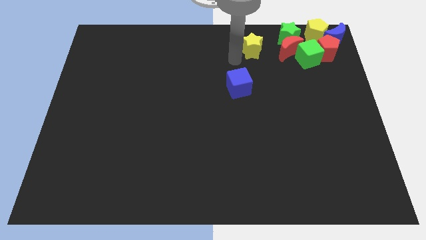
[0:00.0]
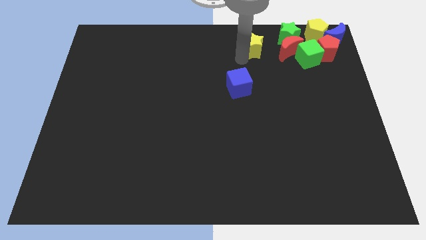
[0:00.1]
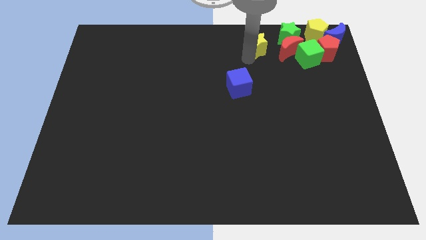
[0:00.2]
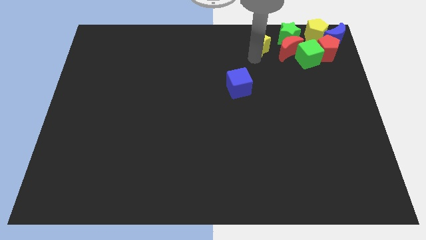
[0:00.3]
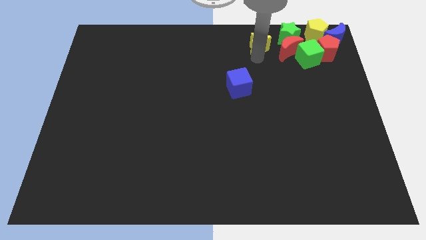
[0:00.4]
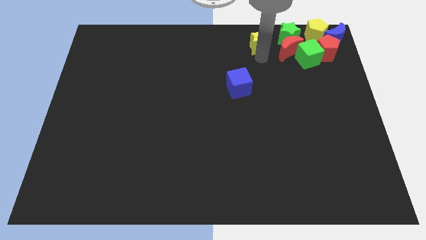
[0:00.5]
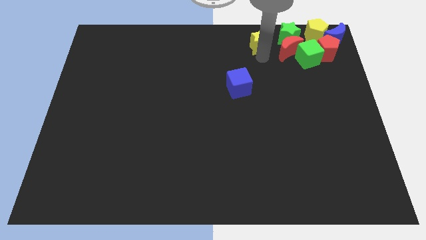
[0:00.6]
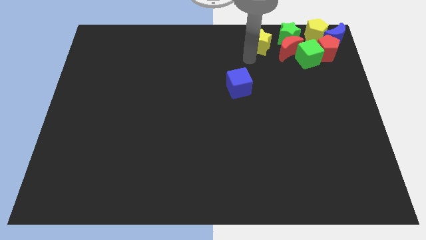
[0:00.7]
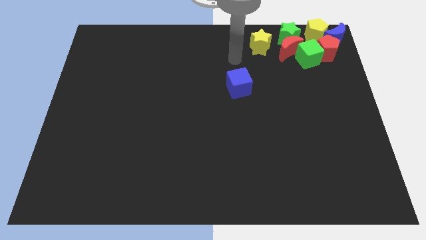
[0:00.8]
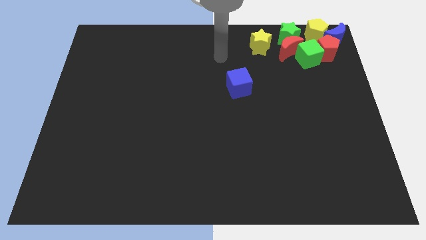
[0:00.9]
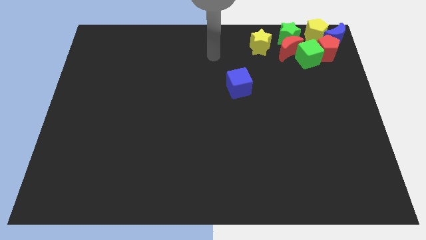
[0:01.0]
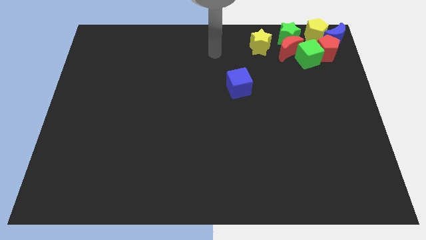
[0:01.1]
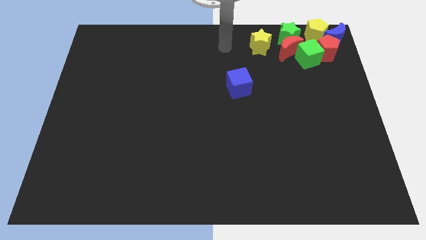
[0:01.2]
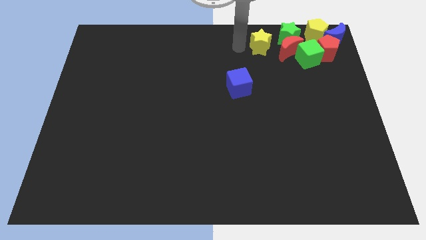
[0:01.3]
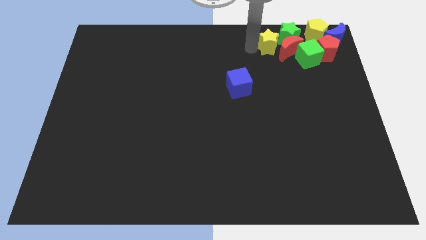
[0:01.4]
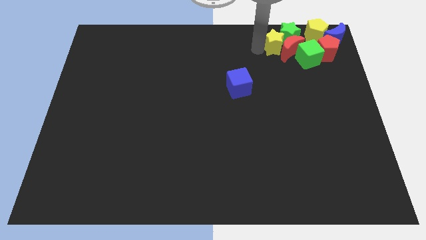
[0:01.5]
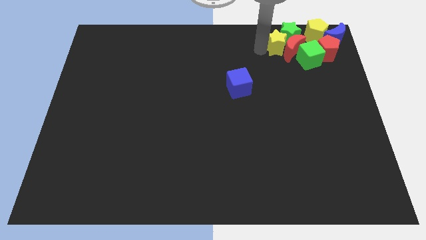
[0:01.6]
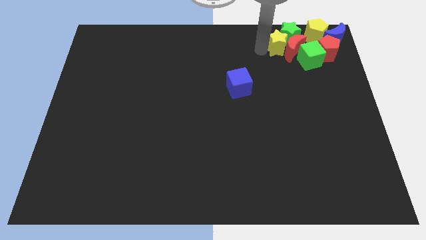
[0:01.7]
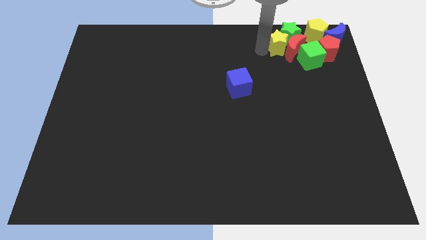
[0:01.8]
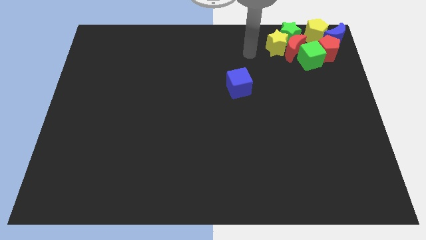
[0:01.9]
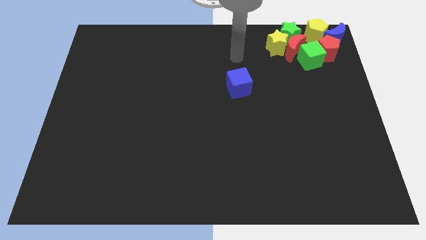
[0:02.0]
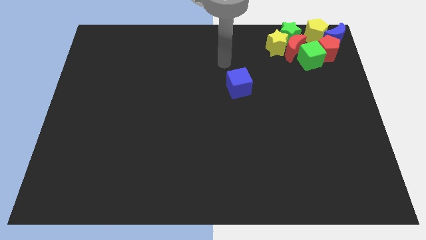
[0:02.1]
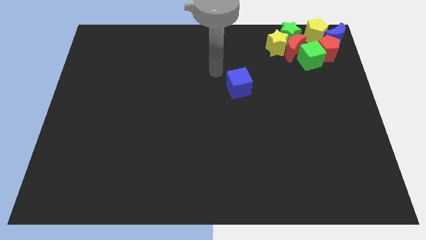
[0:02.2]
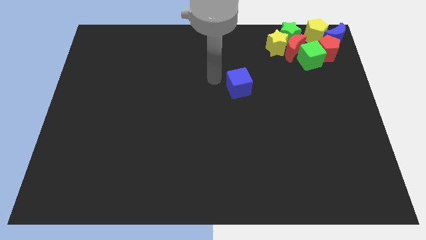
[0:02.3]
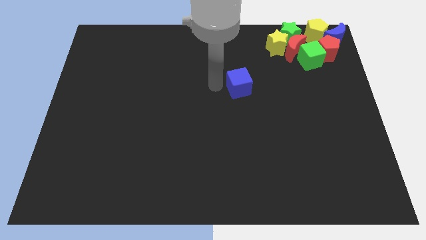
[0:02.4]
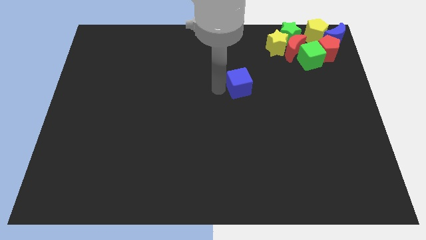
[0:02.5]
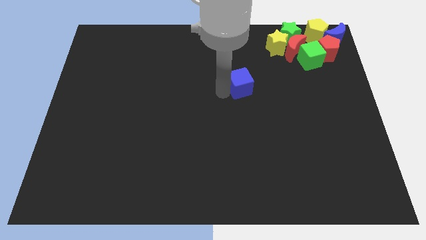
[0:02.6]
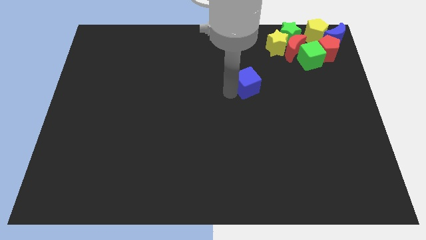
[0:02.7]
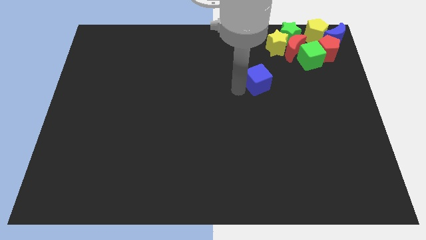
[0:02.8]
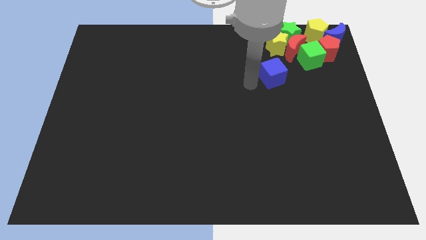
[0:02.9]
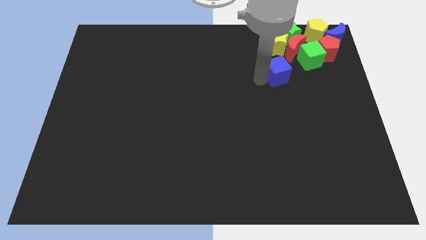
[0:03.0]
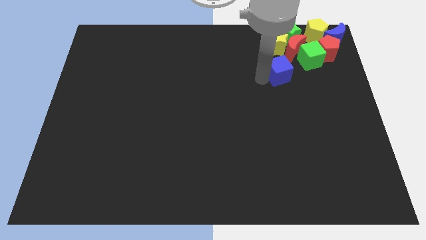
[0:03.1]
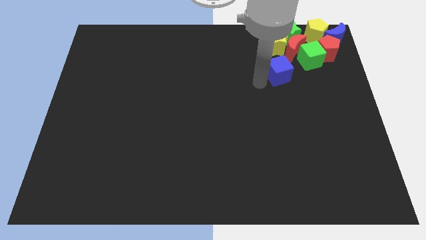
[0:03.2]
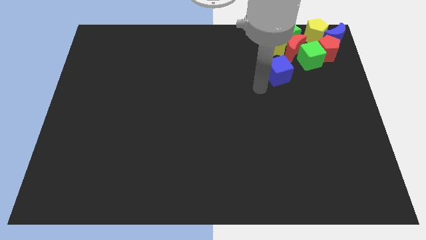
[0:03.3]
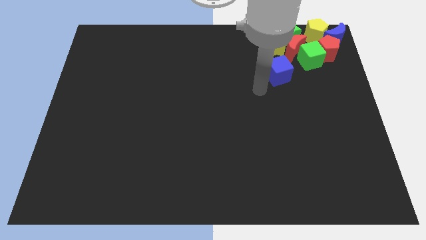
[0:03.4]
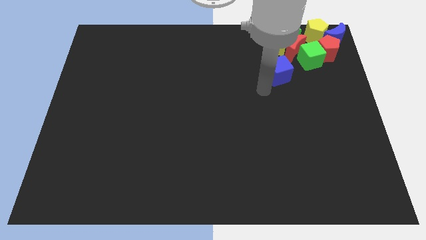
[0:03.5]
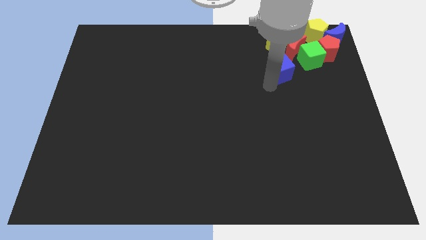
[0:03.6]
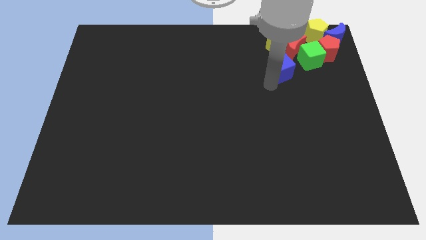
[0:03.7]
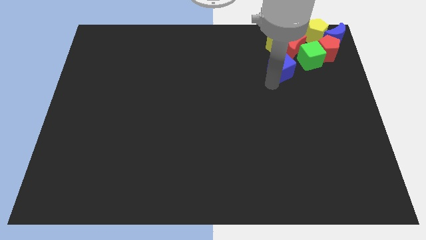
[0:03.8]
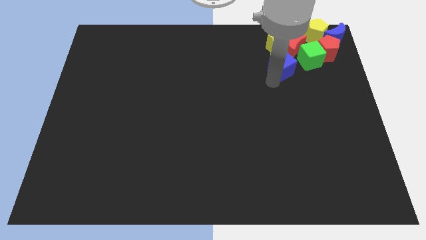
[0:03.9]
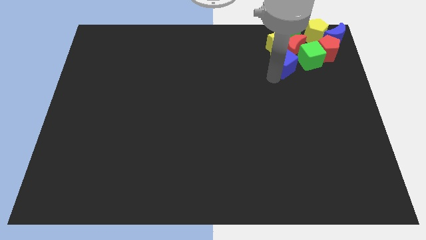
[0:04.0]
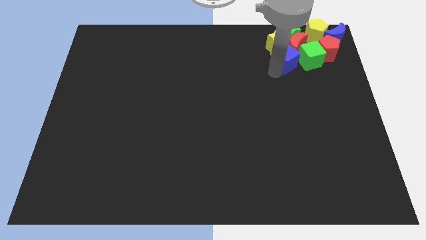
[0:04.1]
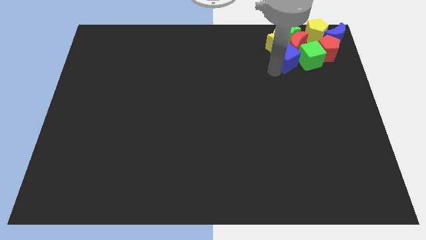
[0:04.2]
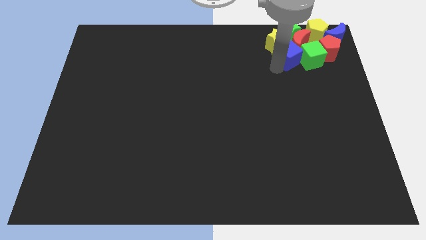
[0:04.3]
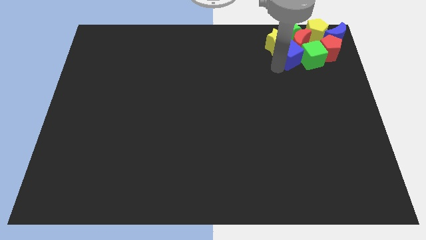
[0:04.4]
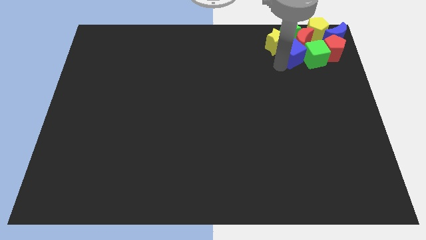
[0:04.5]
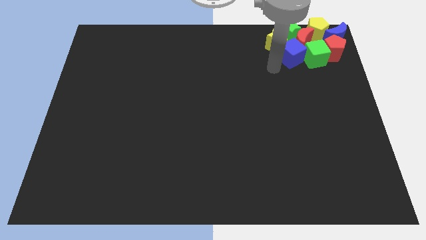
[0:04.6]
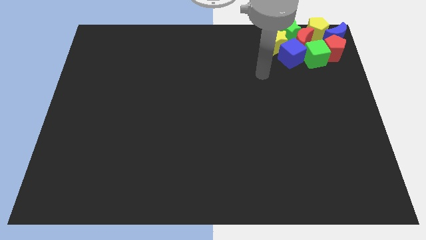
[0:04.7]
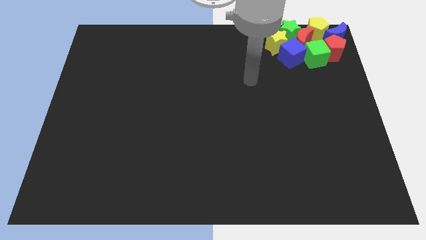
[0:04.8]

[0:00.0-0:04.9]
move the yellow star and blue cube into the group of blocks

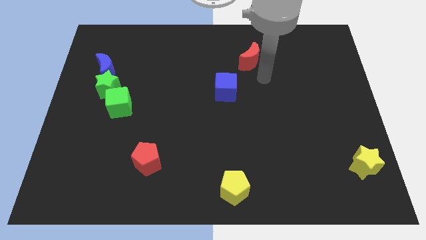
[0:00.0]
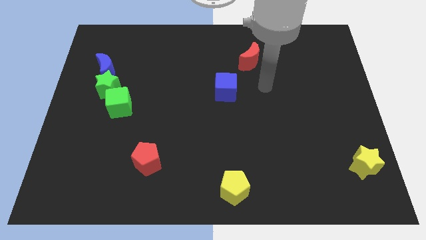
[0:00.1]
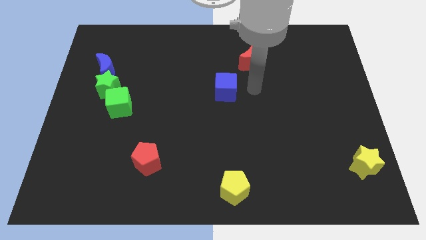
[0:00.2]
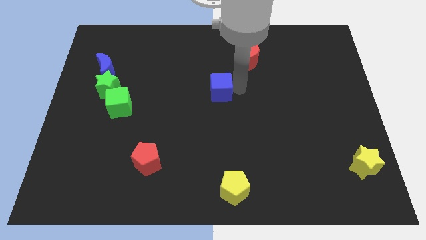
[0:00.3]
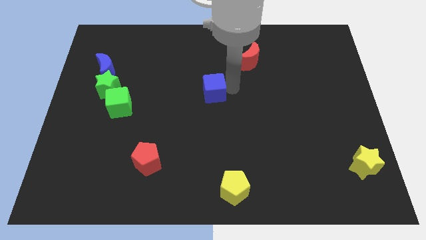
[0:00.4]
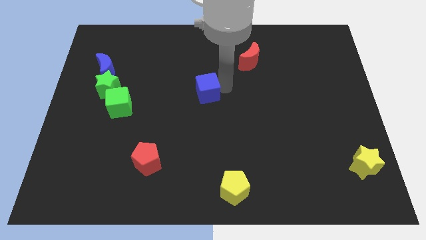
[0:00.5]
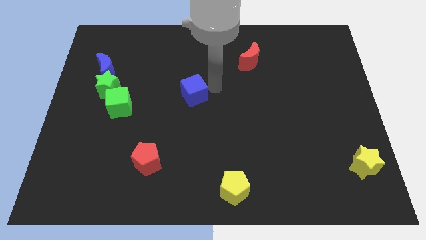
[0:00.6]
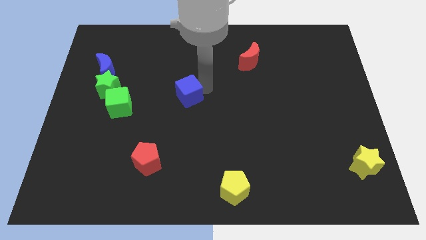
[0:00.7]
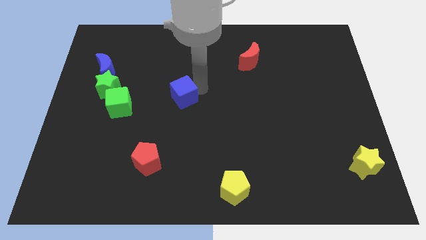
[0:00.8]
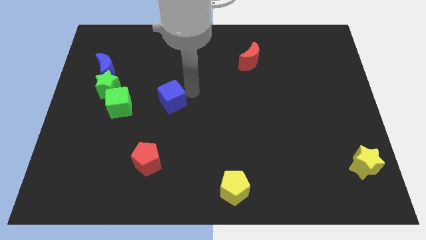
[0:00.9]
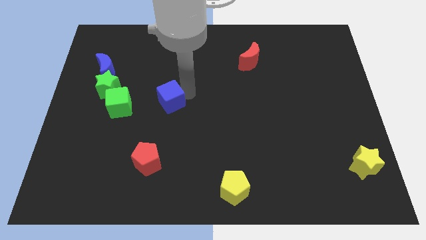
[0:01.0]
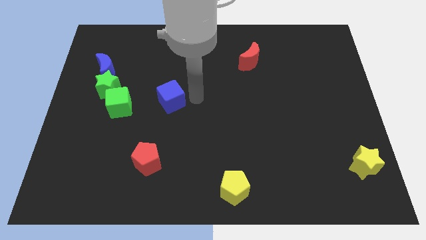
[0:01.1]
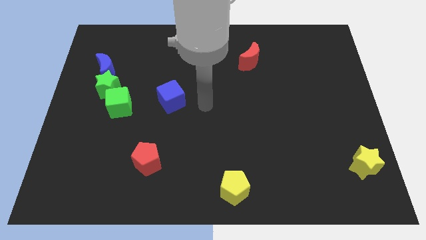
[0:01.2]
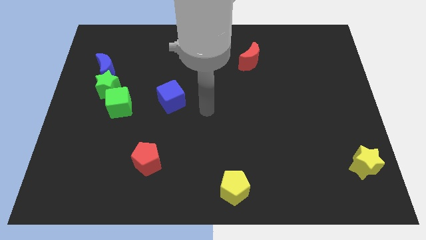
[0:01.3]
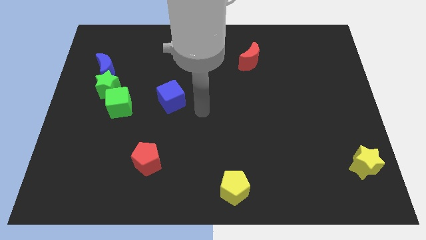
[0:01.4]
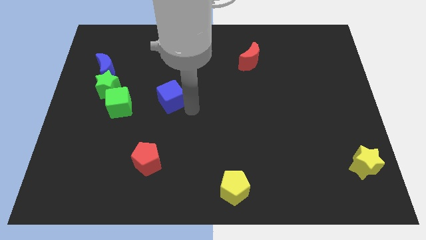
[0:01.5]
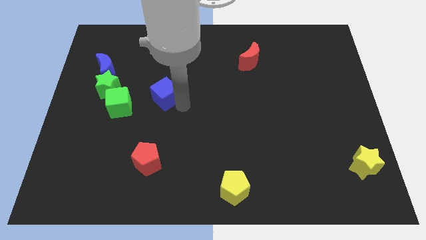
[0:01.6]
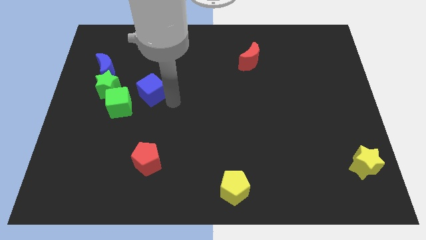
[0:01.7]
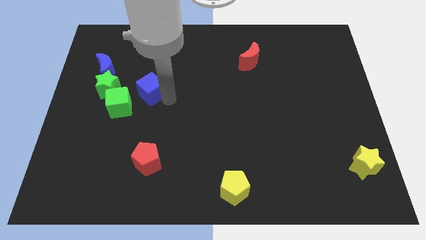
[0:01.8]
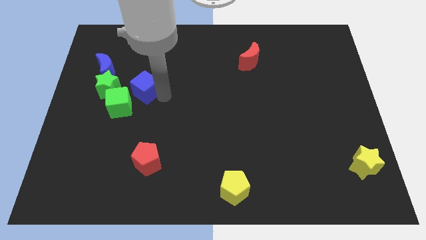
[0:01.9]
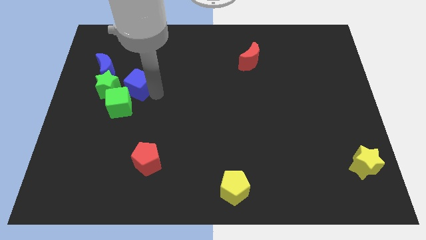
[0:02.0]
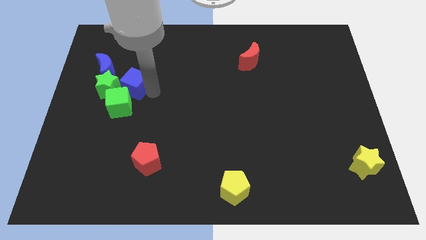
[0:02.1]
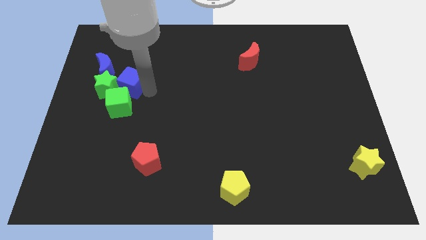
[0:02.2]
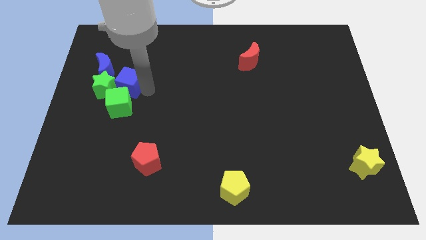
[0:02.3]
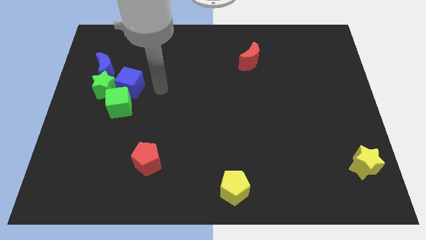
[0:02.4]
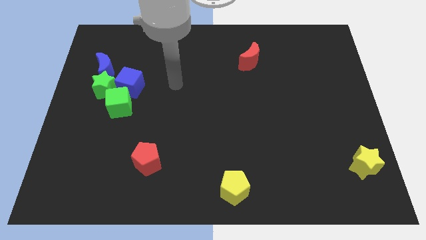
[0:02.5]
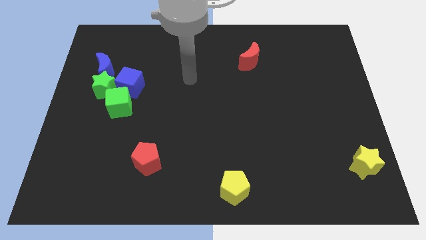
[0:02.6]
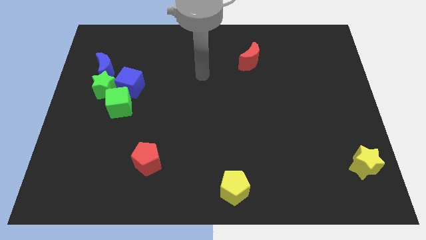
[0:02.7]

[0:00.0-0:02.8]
push the blue cube to the right of the green star

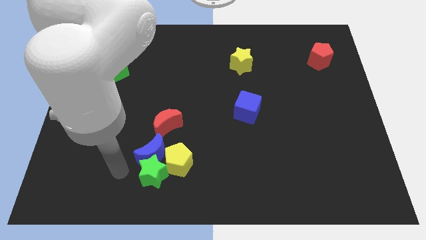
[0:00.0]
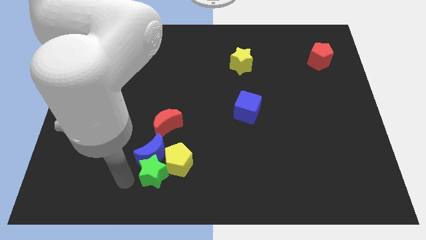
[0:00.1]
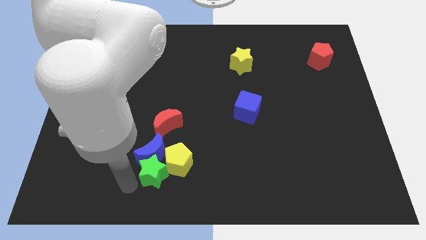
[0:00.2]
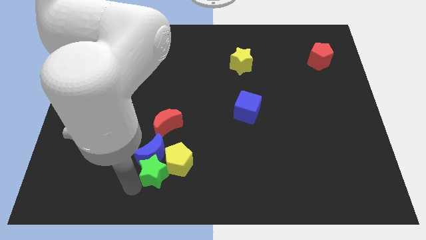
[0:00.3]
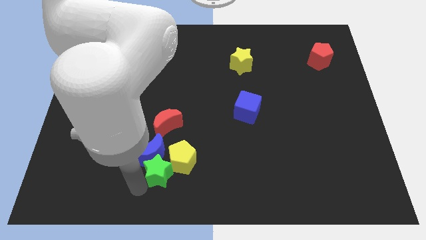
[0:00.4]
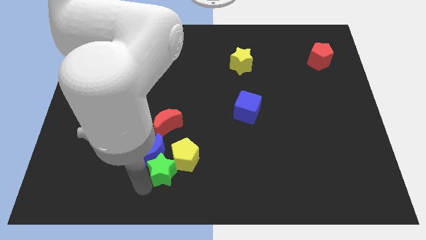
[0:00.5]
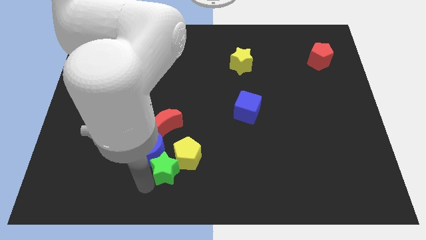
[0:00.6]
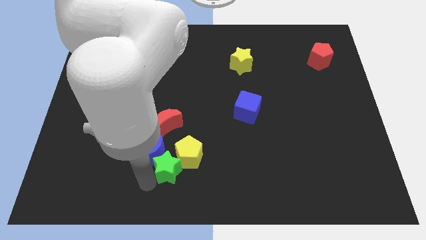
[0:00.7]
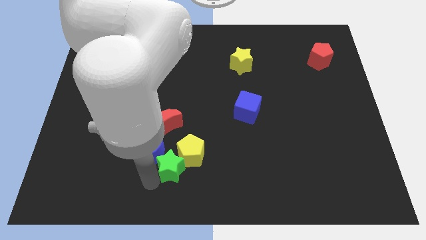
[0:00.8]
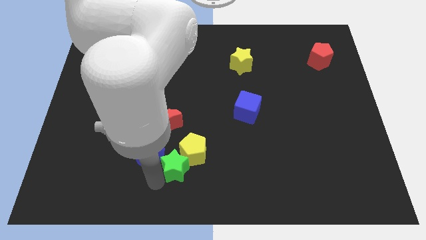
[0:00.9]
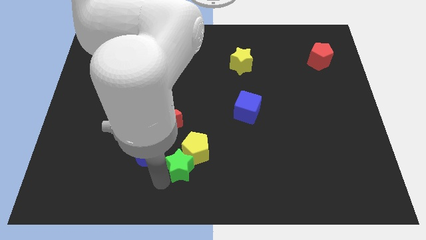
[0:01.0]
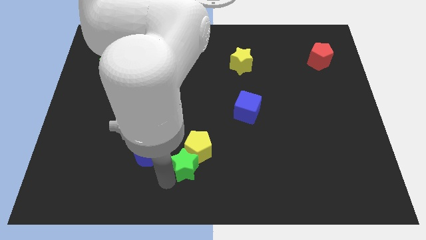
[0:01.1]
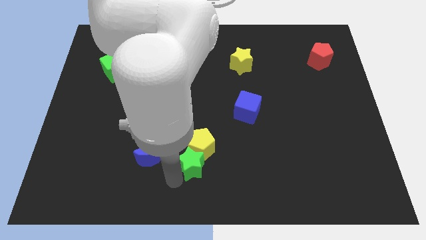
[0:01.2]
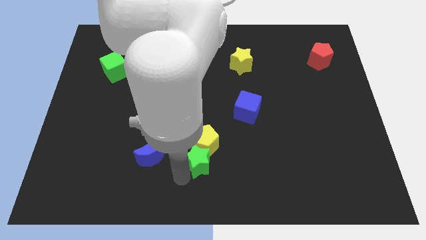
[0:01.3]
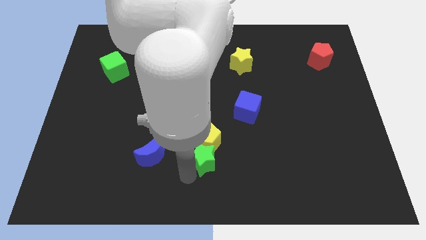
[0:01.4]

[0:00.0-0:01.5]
push the green star along with the yellow pentagon towards up
